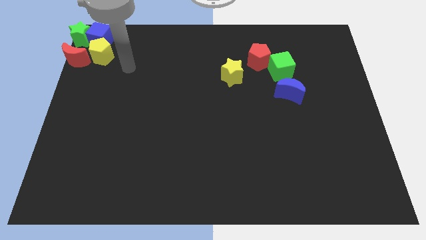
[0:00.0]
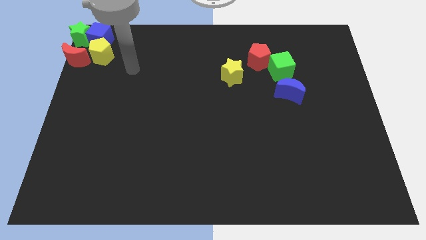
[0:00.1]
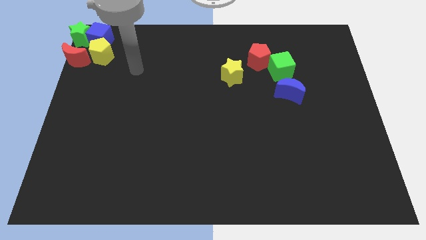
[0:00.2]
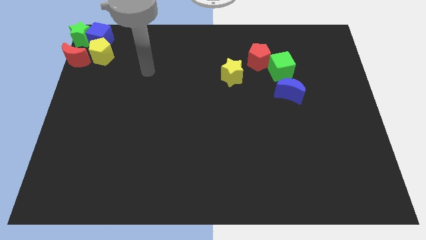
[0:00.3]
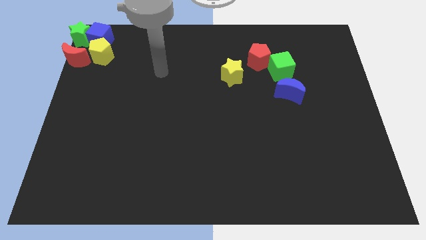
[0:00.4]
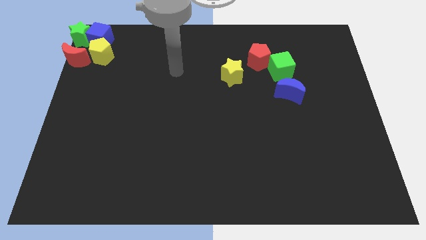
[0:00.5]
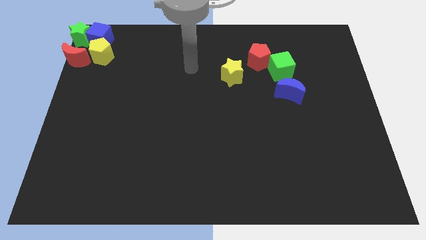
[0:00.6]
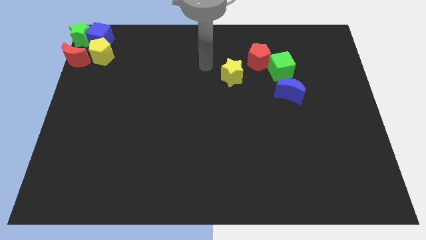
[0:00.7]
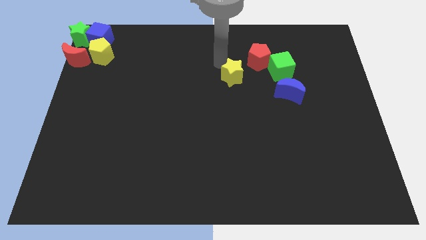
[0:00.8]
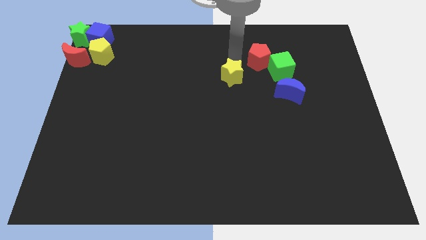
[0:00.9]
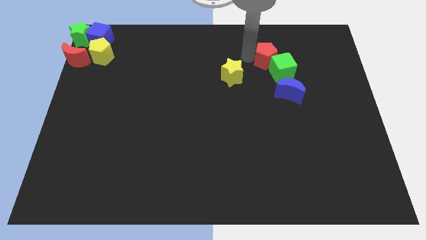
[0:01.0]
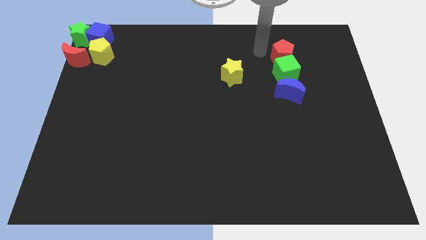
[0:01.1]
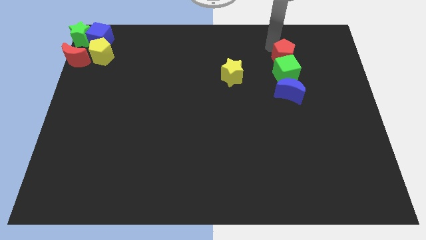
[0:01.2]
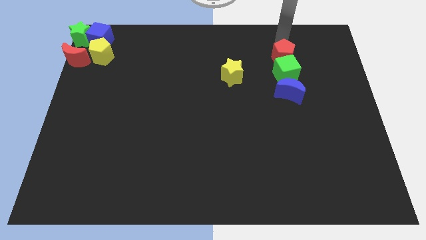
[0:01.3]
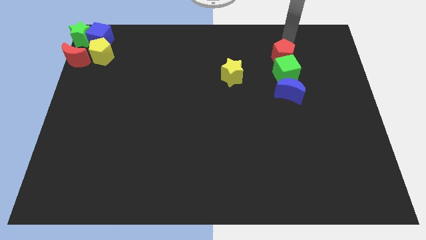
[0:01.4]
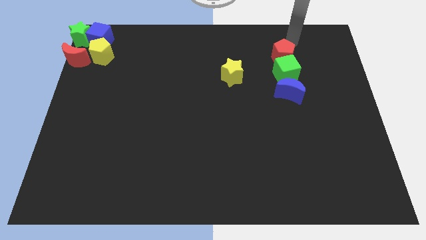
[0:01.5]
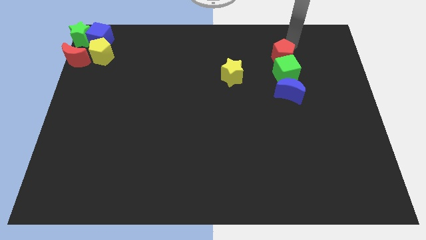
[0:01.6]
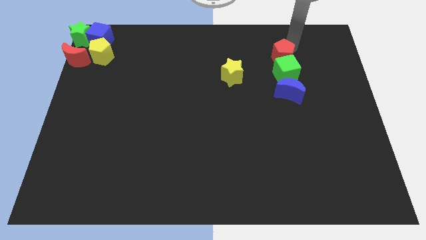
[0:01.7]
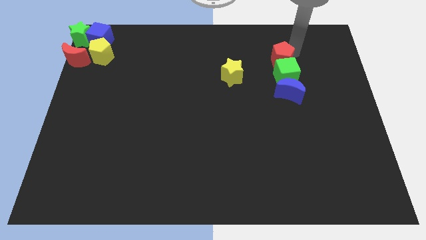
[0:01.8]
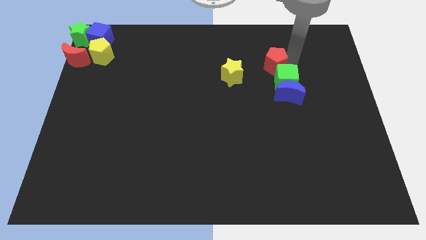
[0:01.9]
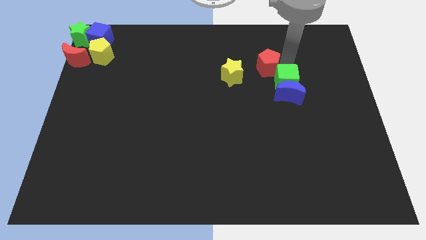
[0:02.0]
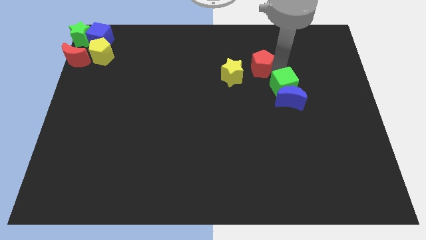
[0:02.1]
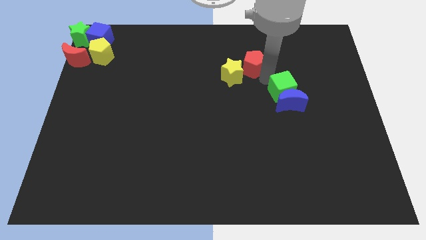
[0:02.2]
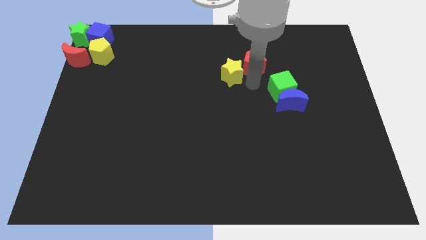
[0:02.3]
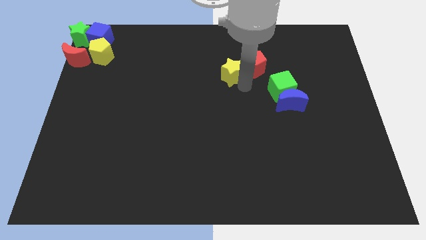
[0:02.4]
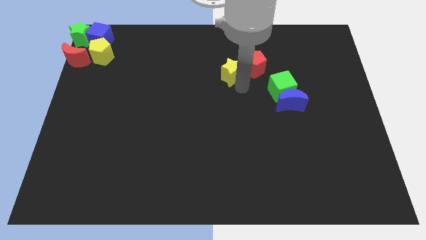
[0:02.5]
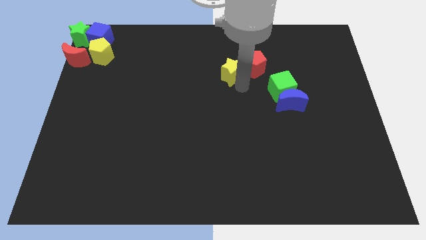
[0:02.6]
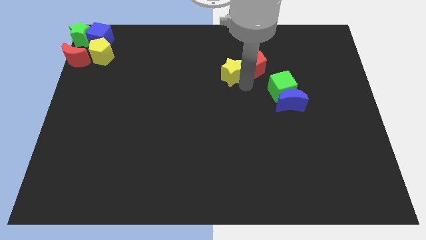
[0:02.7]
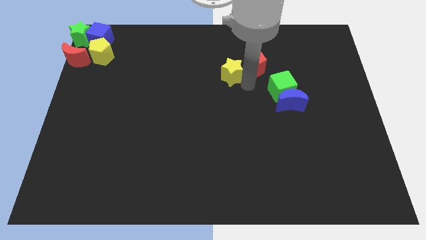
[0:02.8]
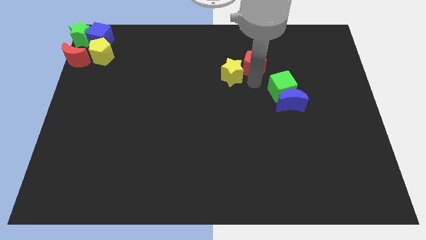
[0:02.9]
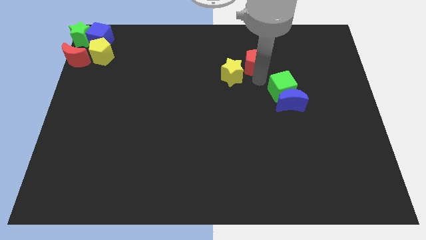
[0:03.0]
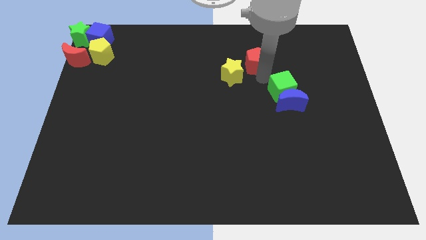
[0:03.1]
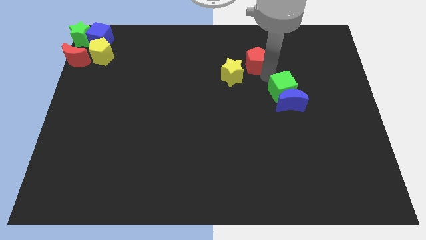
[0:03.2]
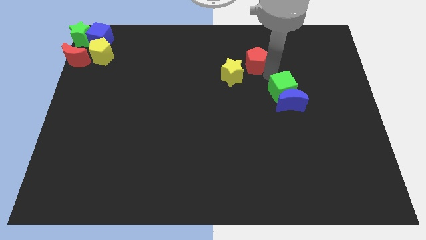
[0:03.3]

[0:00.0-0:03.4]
separate the red pentagon from green cube towards yellow star

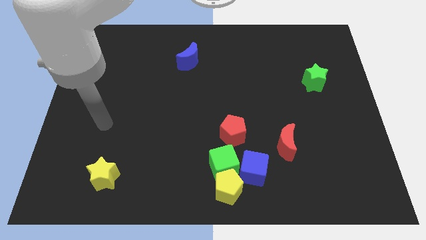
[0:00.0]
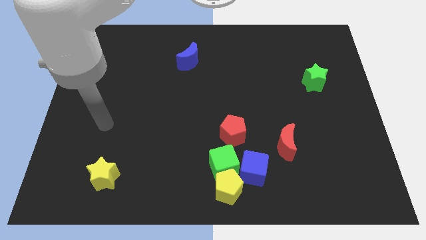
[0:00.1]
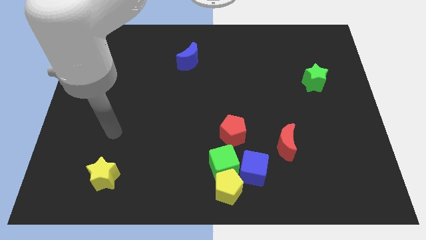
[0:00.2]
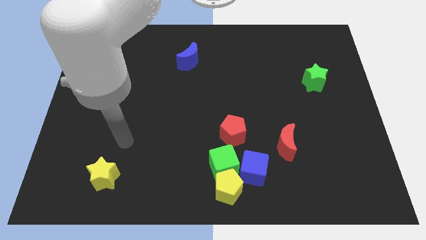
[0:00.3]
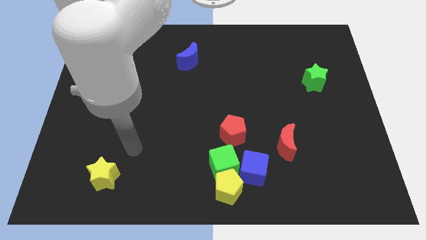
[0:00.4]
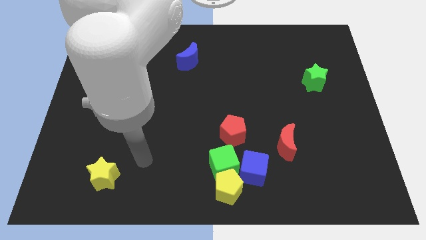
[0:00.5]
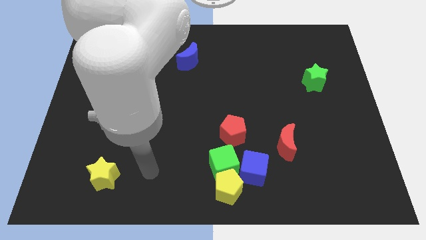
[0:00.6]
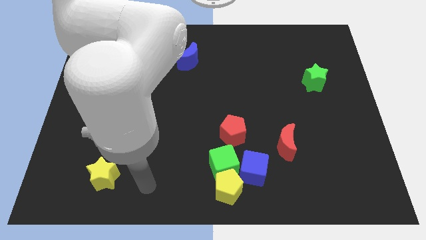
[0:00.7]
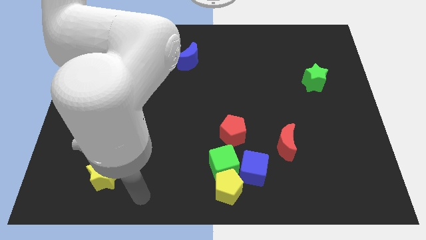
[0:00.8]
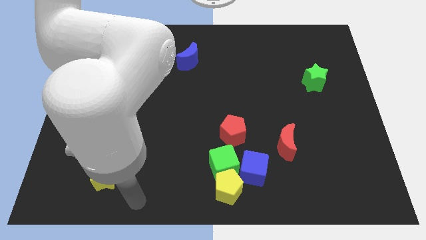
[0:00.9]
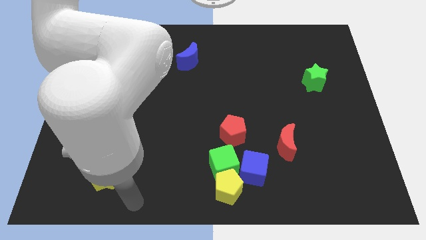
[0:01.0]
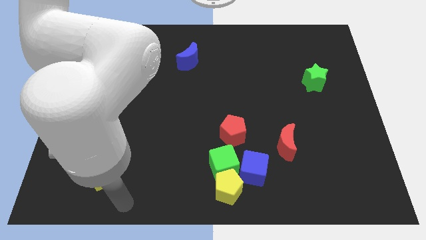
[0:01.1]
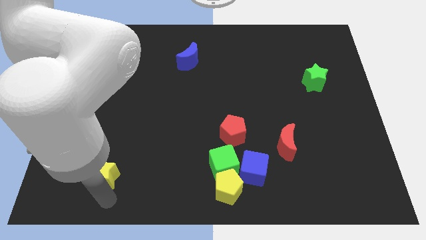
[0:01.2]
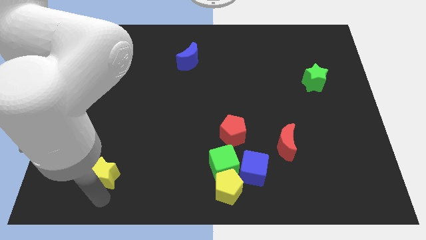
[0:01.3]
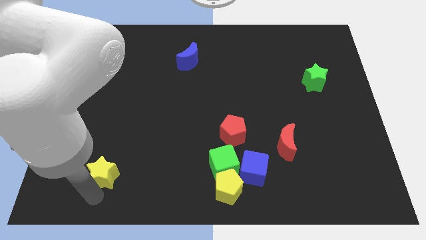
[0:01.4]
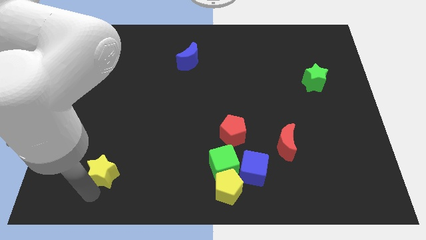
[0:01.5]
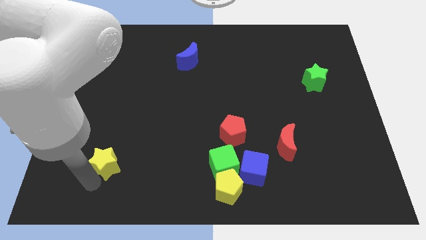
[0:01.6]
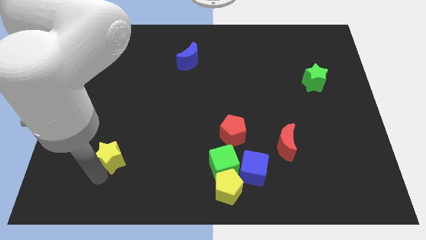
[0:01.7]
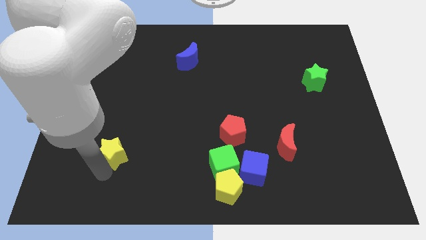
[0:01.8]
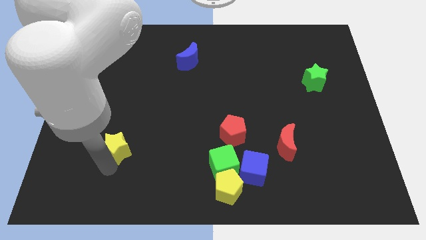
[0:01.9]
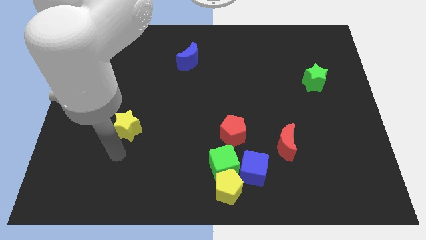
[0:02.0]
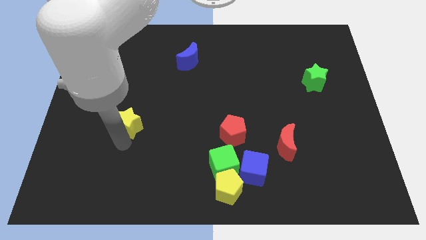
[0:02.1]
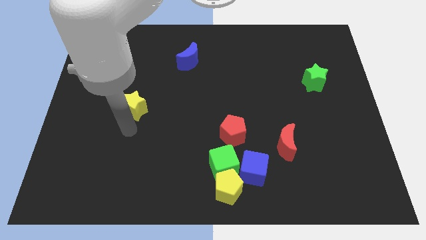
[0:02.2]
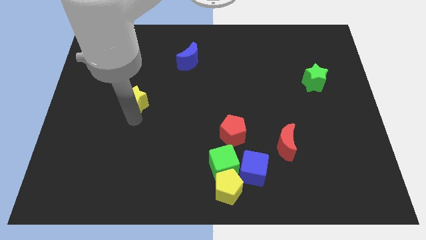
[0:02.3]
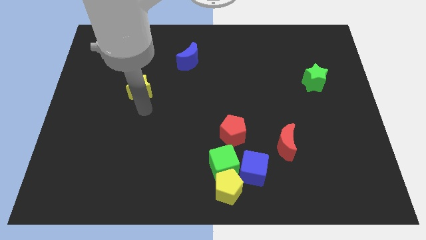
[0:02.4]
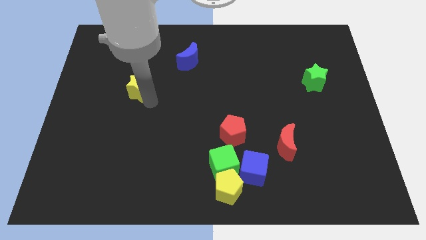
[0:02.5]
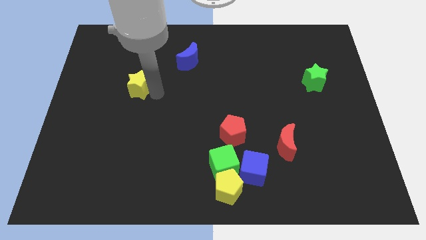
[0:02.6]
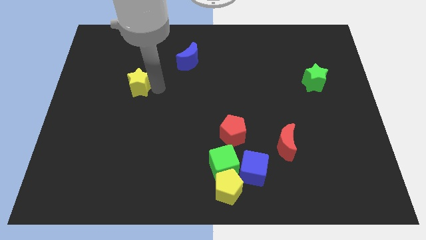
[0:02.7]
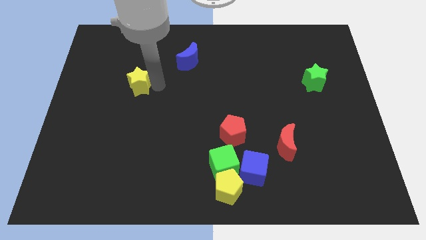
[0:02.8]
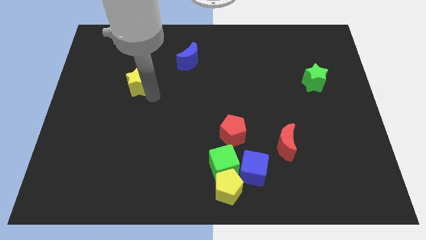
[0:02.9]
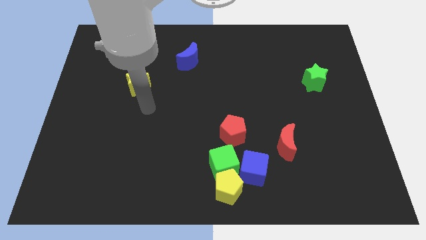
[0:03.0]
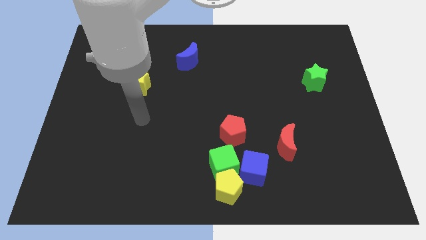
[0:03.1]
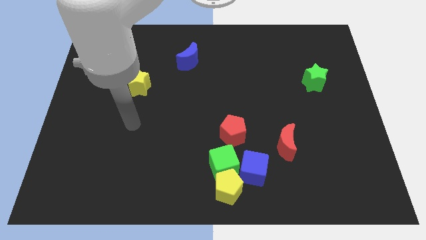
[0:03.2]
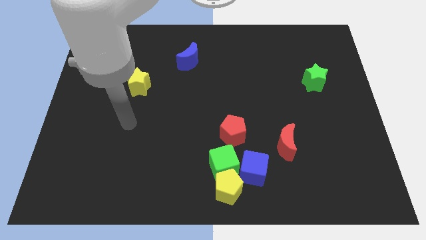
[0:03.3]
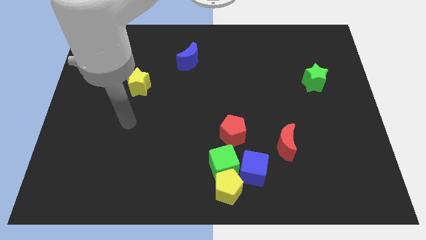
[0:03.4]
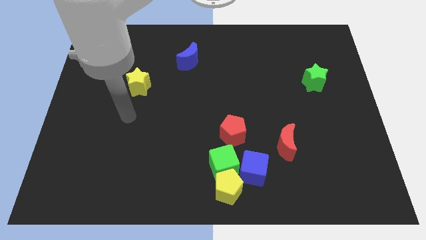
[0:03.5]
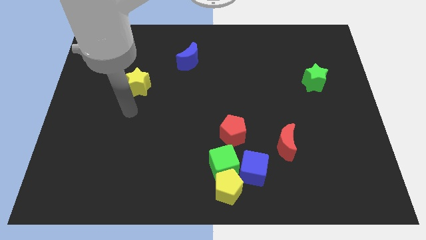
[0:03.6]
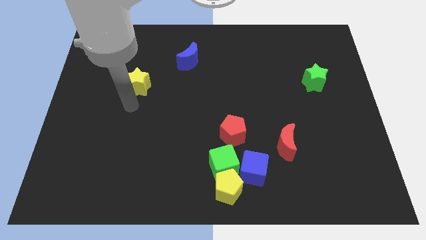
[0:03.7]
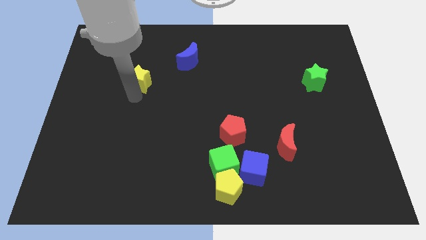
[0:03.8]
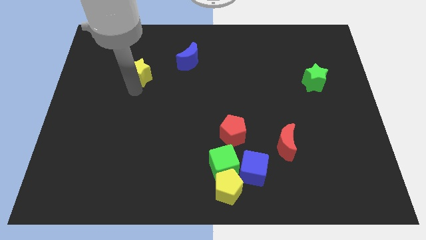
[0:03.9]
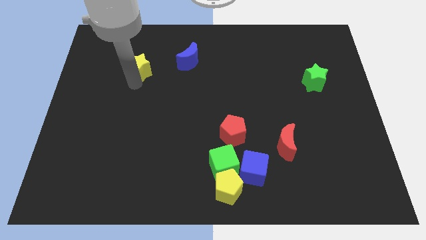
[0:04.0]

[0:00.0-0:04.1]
push the yellow star parallel to blue moon

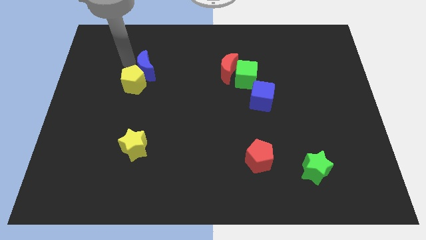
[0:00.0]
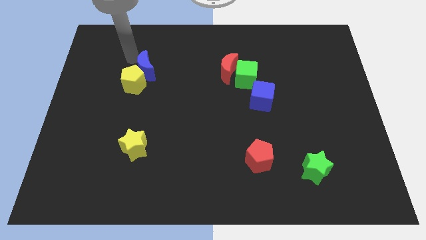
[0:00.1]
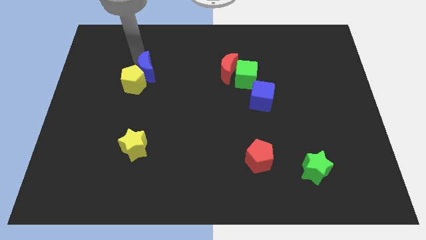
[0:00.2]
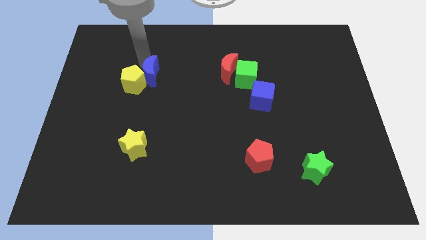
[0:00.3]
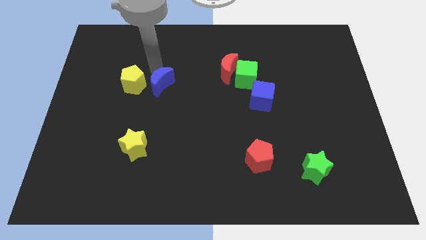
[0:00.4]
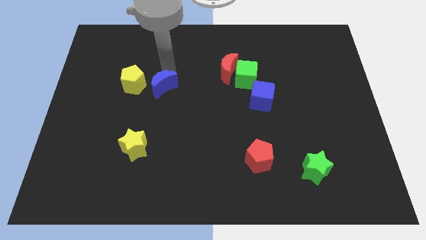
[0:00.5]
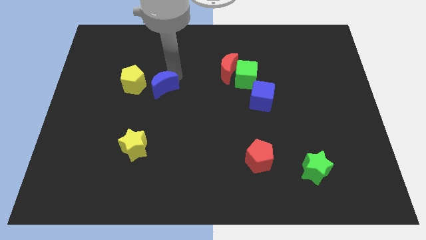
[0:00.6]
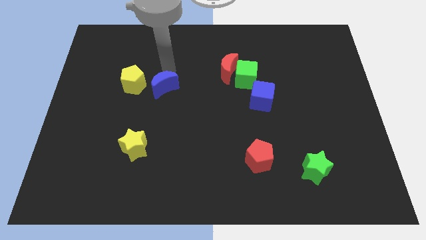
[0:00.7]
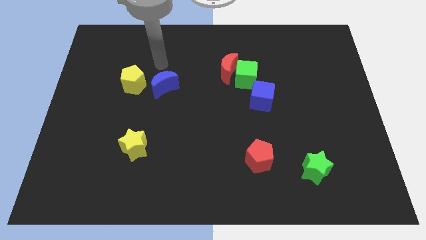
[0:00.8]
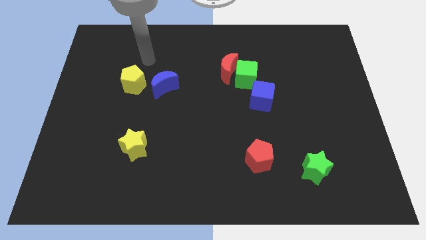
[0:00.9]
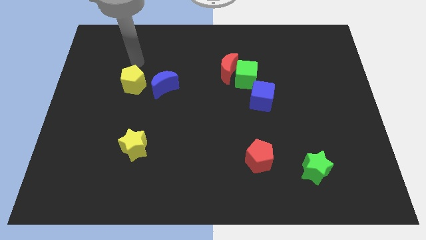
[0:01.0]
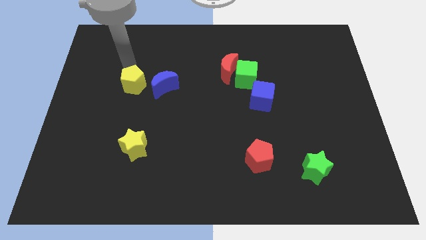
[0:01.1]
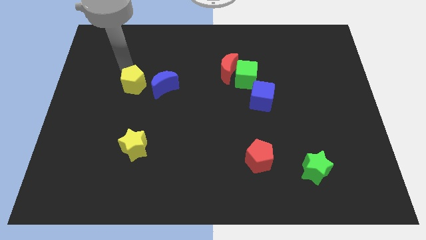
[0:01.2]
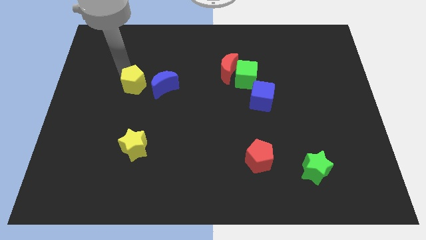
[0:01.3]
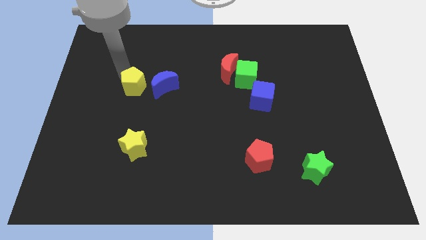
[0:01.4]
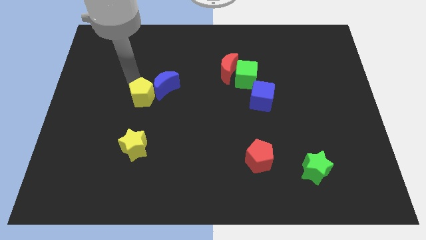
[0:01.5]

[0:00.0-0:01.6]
place the blue moon right to the yellow pentagon
